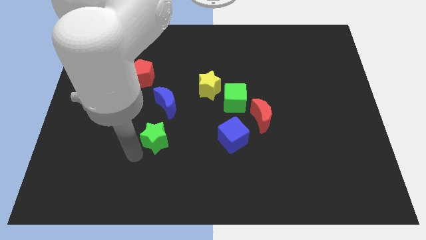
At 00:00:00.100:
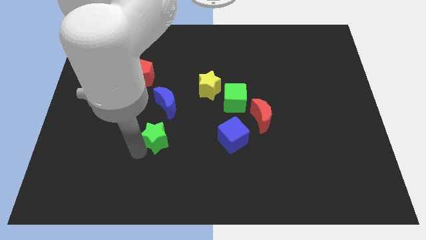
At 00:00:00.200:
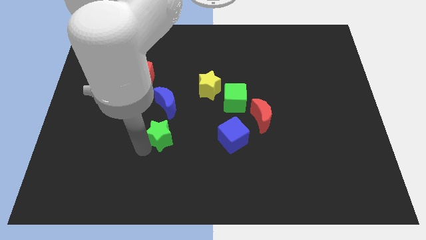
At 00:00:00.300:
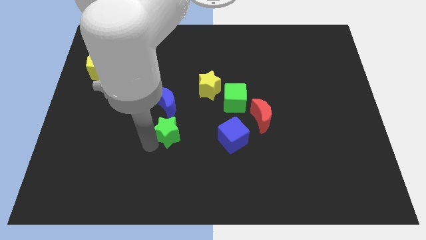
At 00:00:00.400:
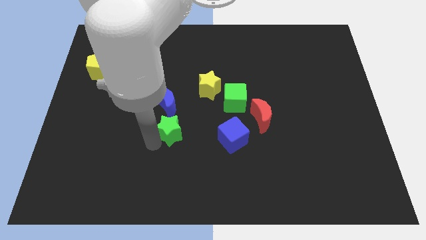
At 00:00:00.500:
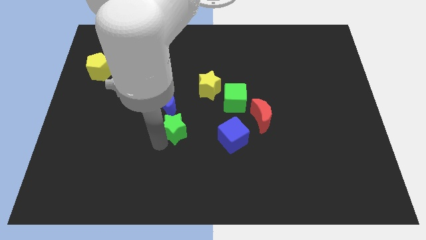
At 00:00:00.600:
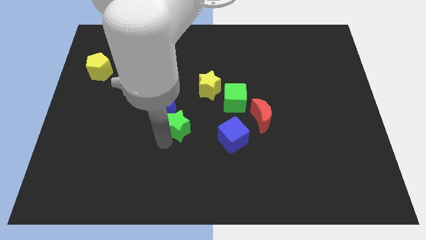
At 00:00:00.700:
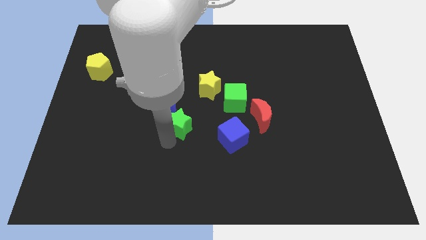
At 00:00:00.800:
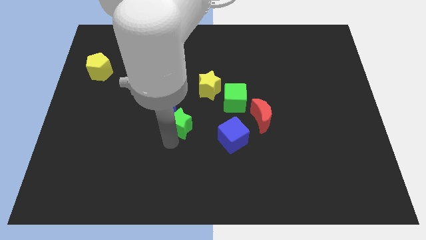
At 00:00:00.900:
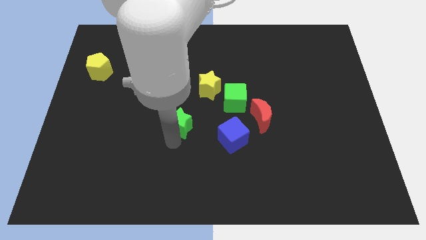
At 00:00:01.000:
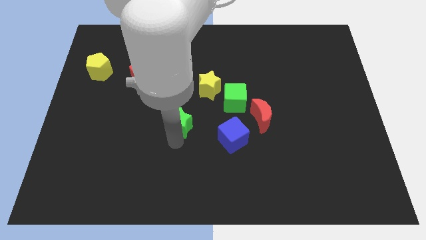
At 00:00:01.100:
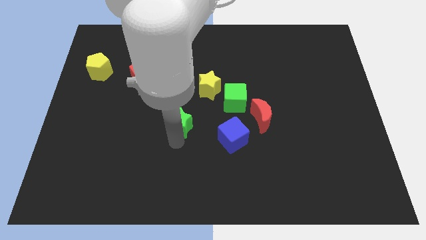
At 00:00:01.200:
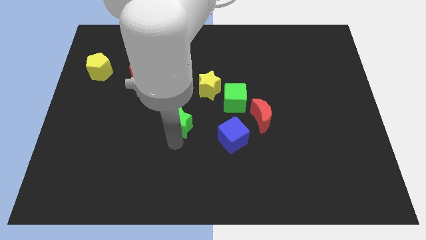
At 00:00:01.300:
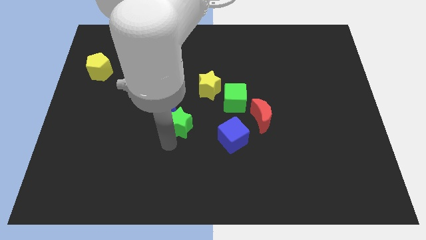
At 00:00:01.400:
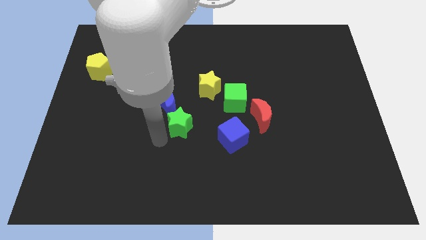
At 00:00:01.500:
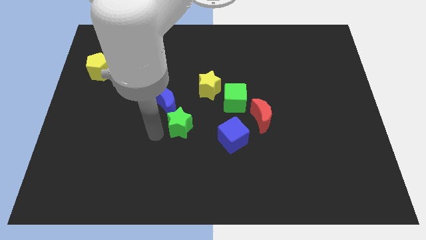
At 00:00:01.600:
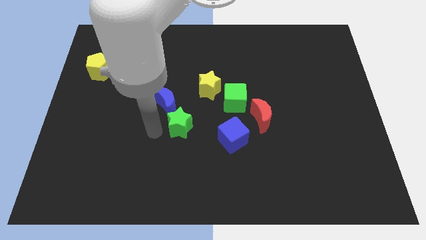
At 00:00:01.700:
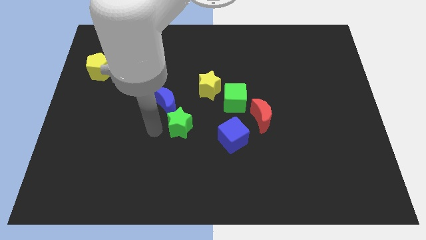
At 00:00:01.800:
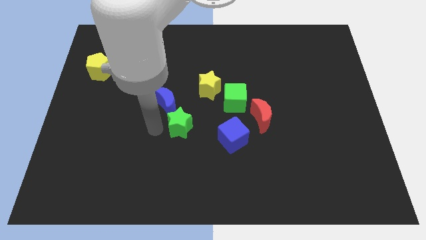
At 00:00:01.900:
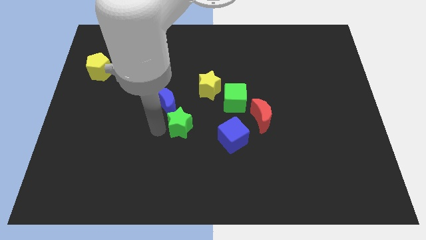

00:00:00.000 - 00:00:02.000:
put the green star and the blue crescent together

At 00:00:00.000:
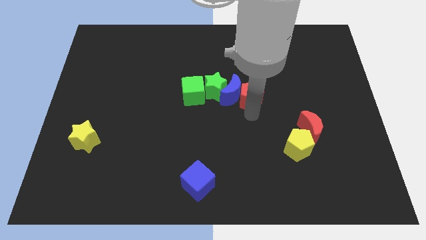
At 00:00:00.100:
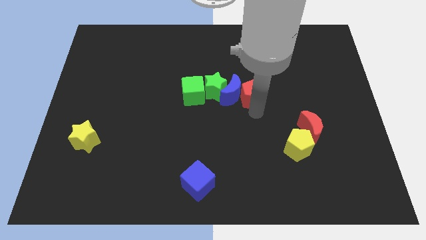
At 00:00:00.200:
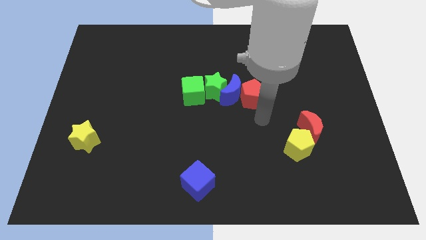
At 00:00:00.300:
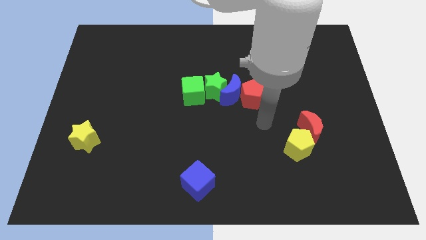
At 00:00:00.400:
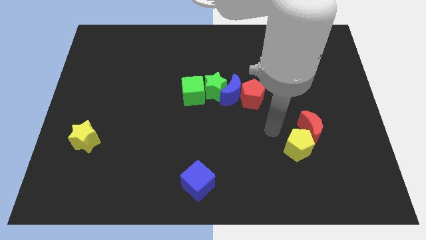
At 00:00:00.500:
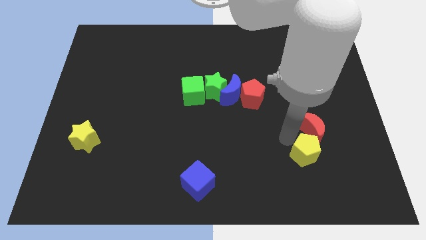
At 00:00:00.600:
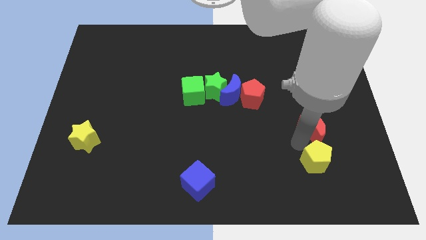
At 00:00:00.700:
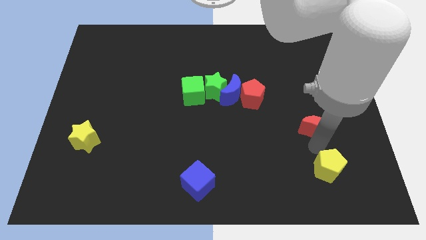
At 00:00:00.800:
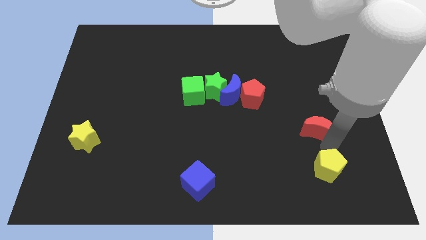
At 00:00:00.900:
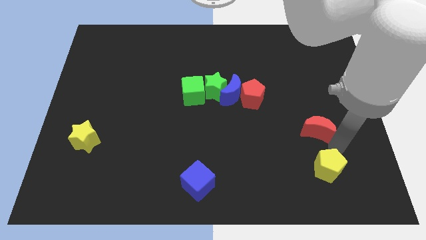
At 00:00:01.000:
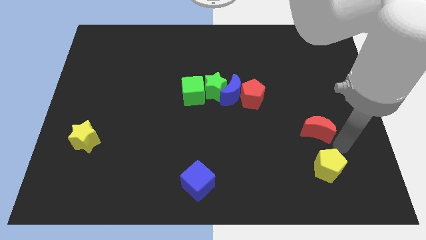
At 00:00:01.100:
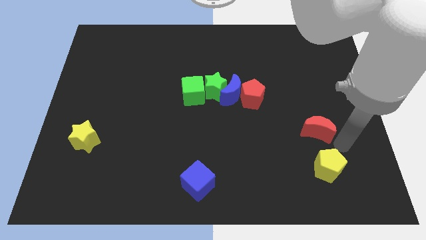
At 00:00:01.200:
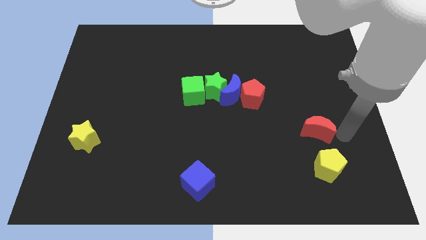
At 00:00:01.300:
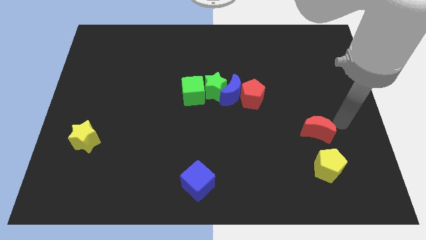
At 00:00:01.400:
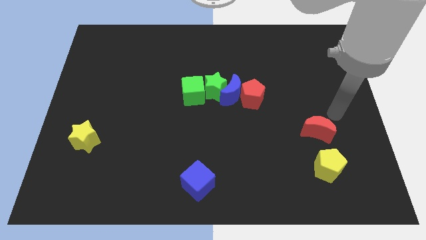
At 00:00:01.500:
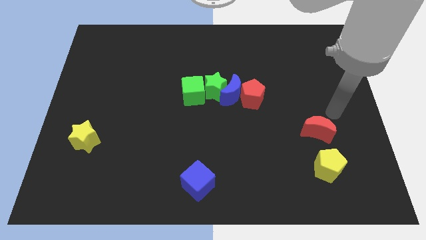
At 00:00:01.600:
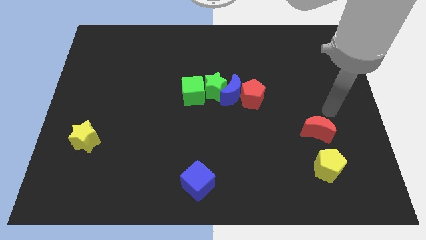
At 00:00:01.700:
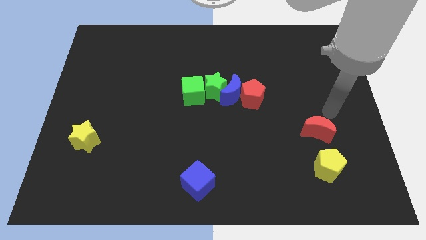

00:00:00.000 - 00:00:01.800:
separate the red moon and yellow pentagon

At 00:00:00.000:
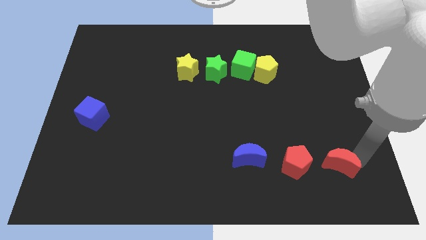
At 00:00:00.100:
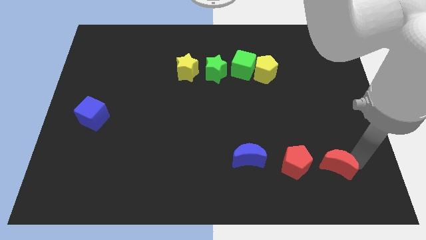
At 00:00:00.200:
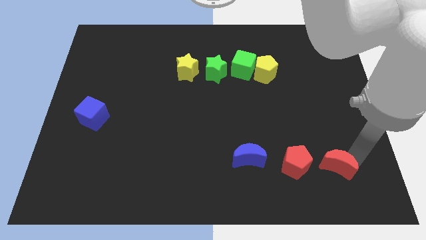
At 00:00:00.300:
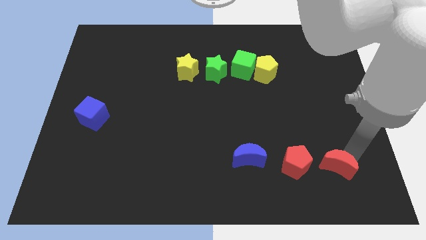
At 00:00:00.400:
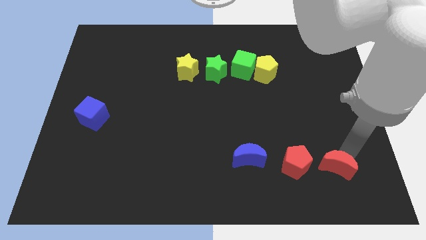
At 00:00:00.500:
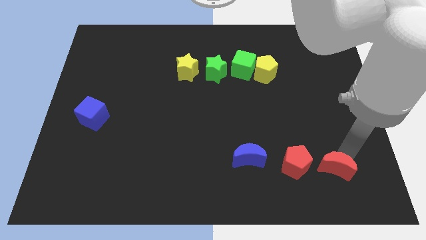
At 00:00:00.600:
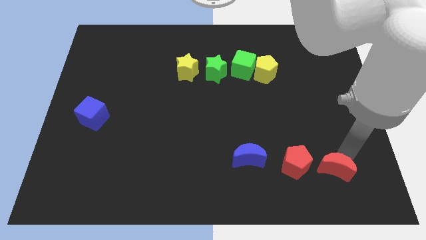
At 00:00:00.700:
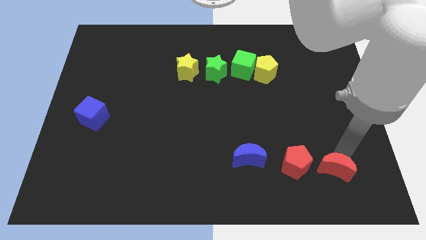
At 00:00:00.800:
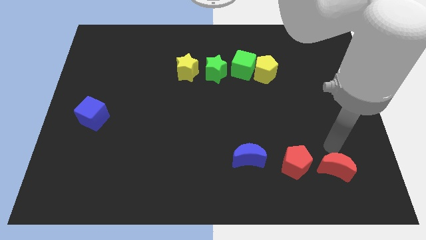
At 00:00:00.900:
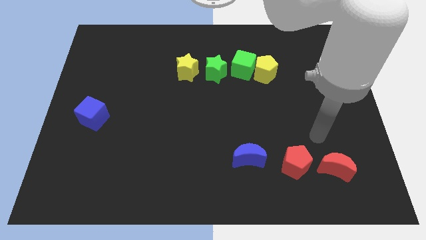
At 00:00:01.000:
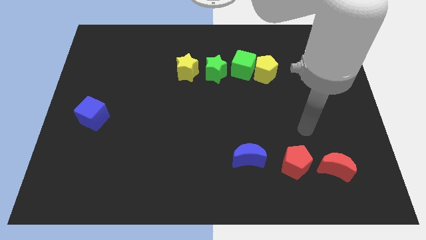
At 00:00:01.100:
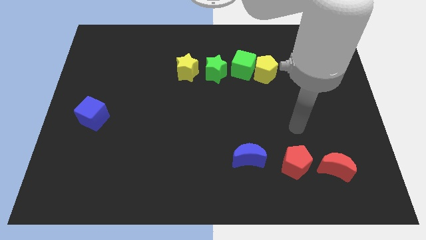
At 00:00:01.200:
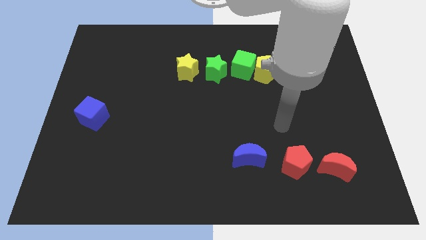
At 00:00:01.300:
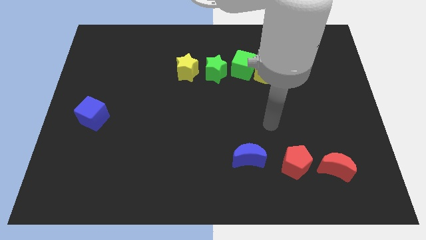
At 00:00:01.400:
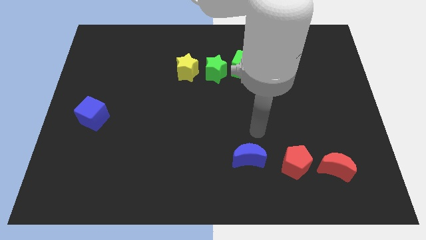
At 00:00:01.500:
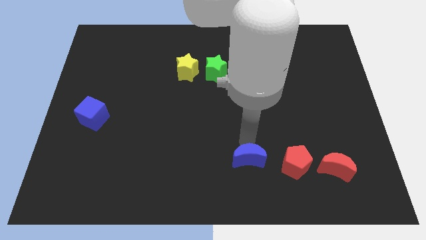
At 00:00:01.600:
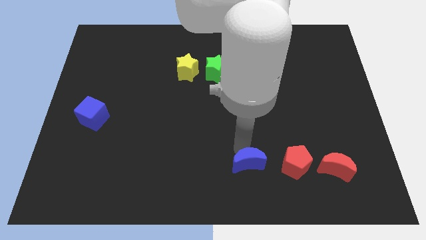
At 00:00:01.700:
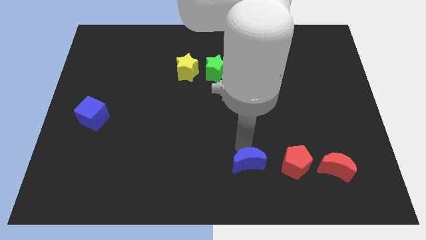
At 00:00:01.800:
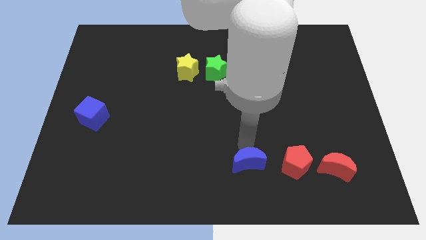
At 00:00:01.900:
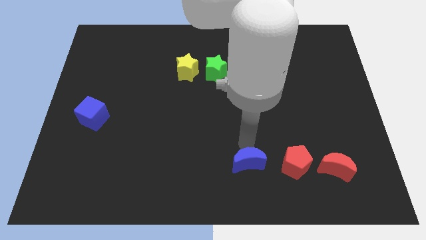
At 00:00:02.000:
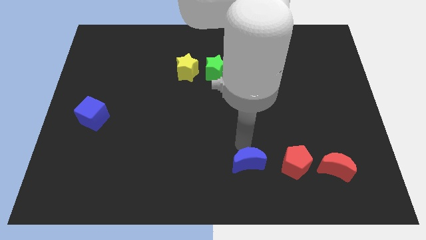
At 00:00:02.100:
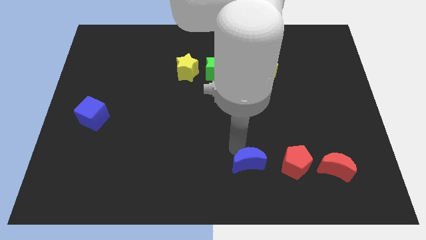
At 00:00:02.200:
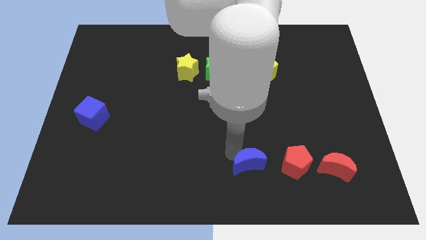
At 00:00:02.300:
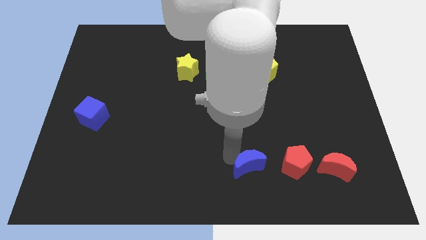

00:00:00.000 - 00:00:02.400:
adjust the red moon and blue moon to make it horizontally

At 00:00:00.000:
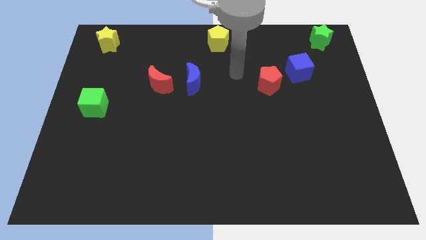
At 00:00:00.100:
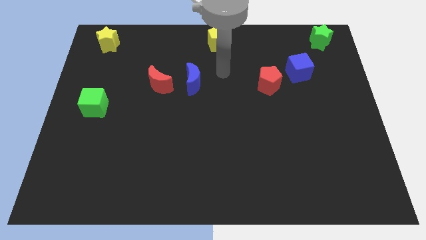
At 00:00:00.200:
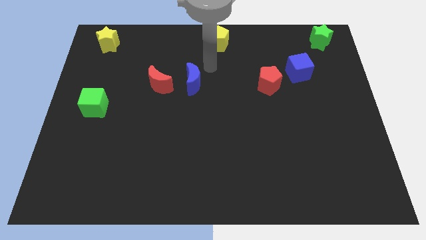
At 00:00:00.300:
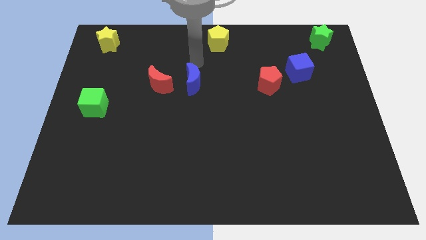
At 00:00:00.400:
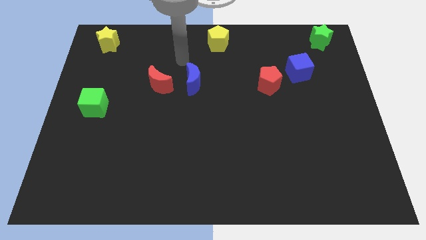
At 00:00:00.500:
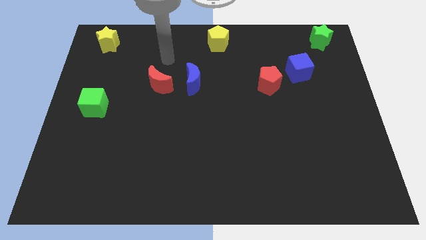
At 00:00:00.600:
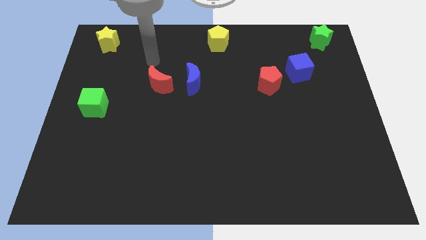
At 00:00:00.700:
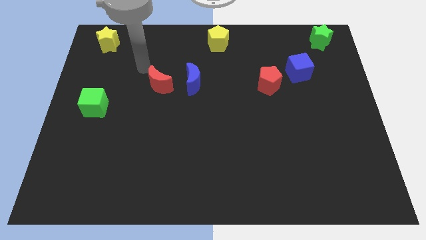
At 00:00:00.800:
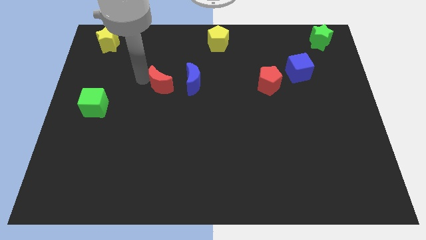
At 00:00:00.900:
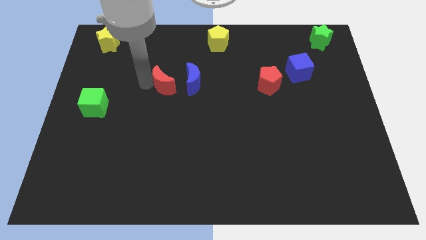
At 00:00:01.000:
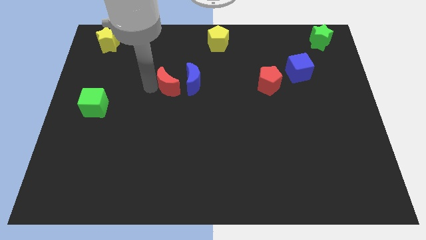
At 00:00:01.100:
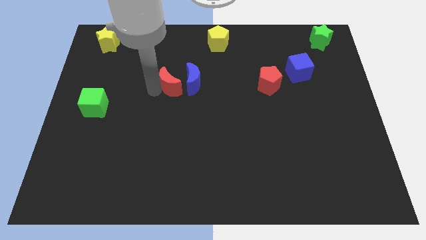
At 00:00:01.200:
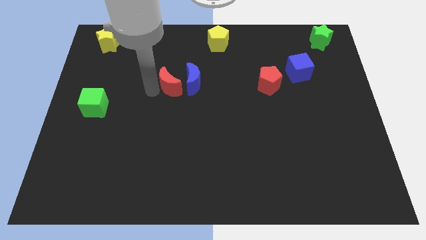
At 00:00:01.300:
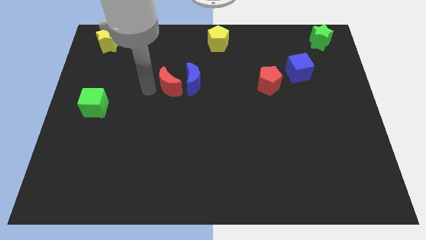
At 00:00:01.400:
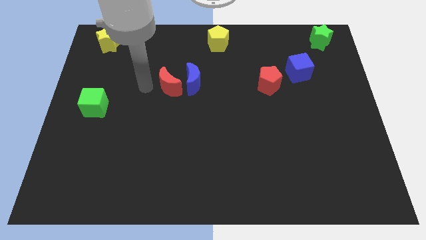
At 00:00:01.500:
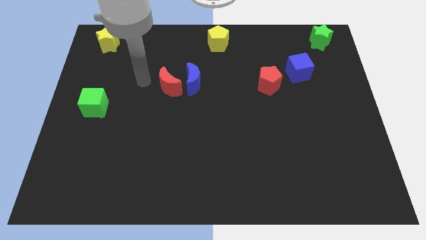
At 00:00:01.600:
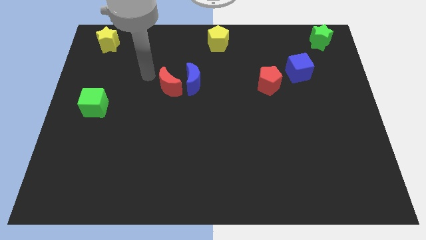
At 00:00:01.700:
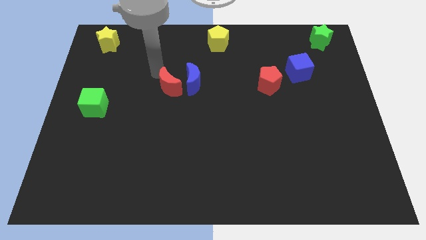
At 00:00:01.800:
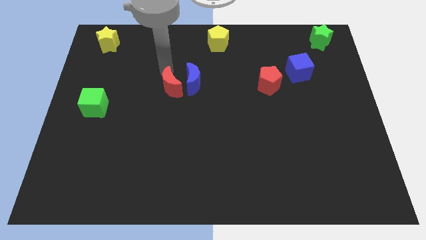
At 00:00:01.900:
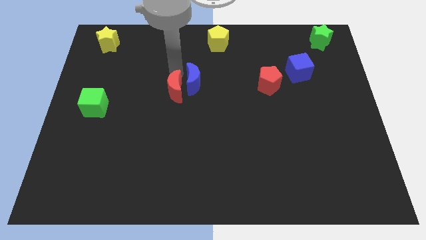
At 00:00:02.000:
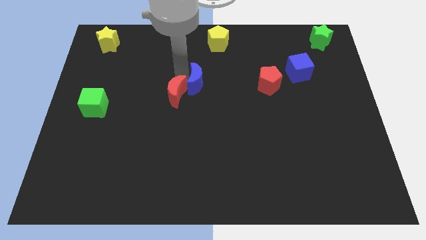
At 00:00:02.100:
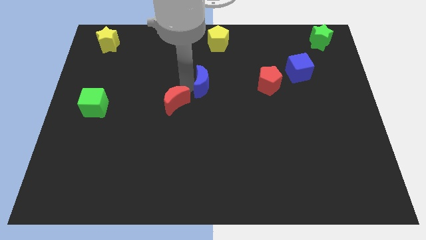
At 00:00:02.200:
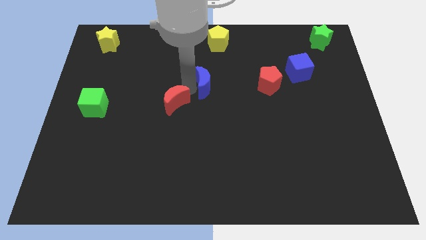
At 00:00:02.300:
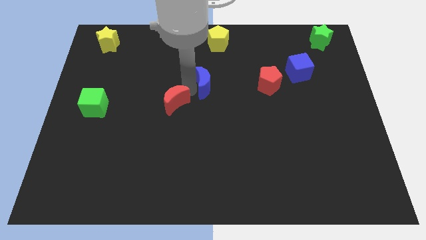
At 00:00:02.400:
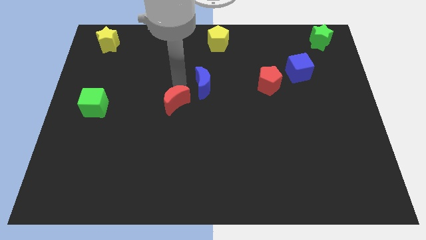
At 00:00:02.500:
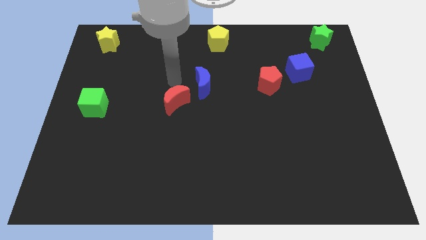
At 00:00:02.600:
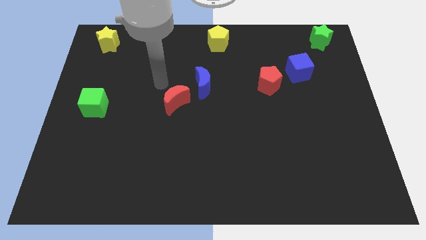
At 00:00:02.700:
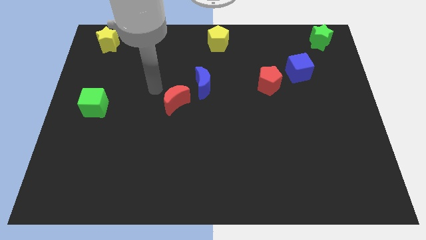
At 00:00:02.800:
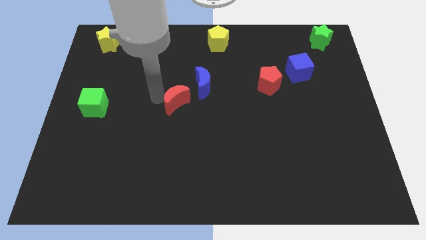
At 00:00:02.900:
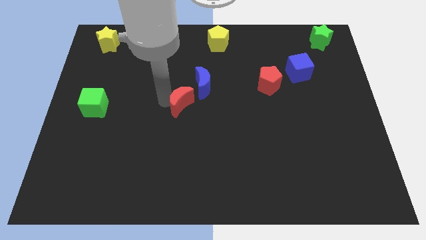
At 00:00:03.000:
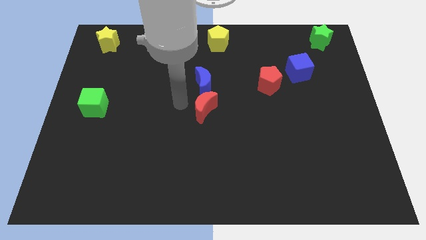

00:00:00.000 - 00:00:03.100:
move the red crescent to the bottom of the blue crescent
